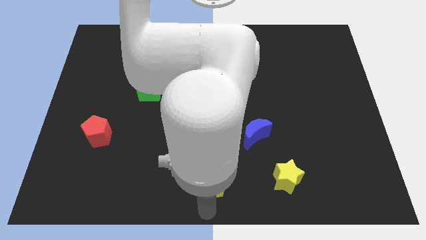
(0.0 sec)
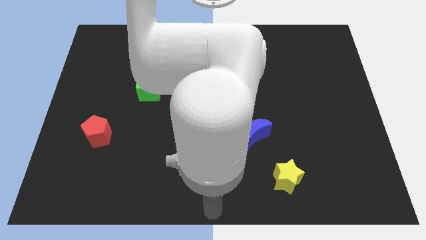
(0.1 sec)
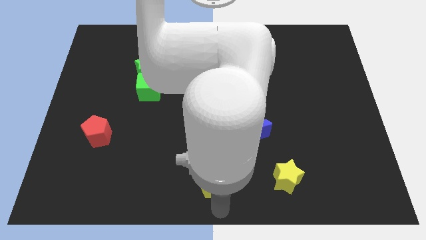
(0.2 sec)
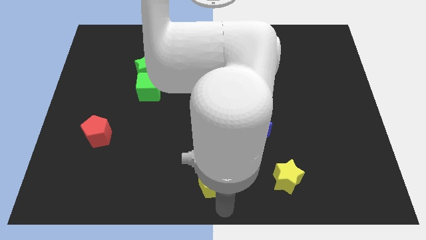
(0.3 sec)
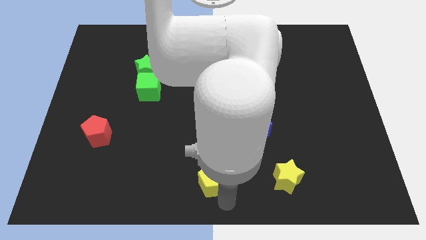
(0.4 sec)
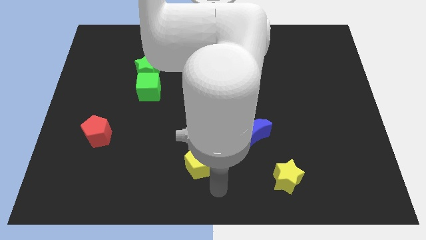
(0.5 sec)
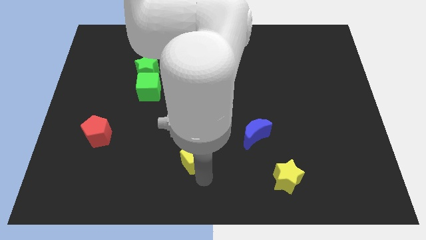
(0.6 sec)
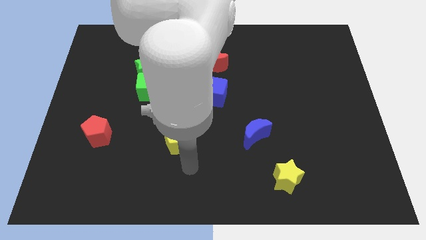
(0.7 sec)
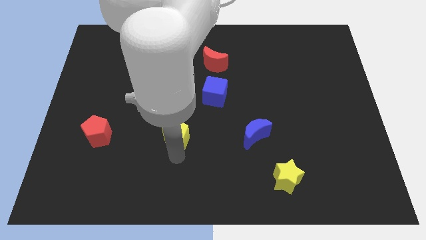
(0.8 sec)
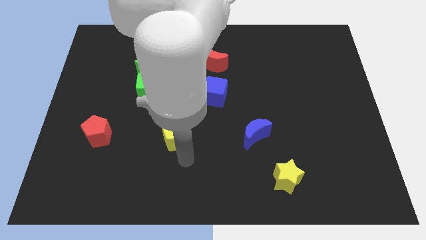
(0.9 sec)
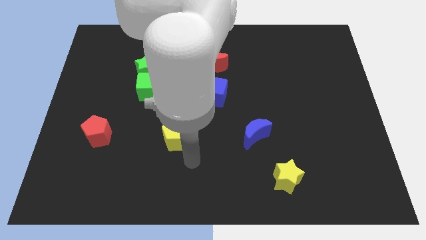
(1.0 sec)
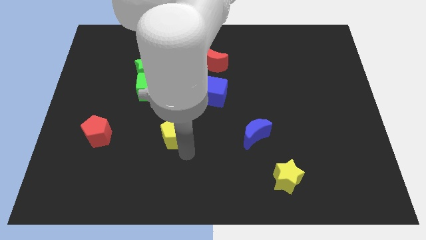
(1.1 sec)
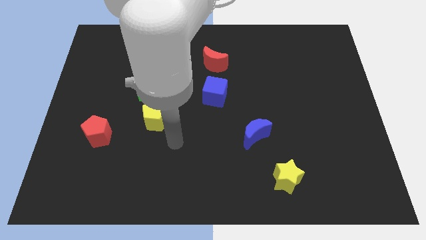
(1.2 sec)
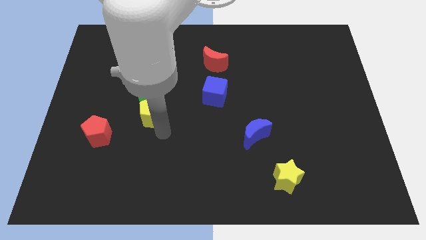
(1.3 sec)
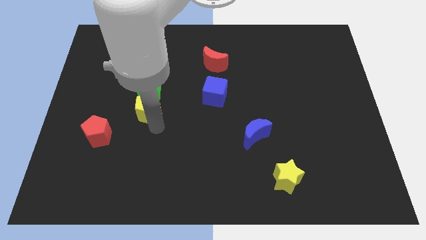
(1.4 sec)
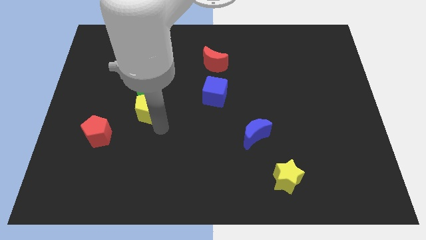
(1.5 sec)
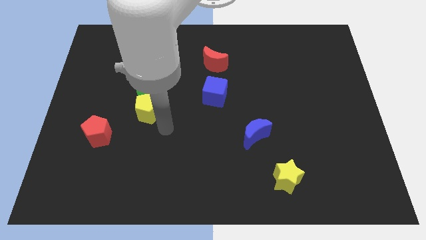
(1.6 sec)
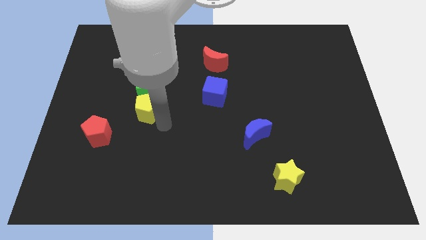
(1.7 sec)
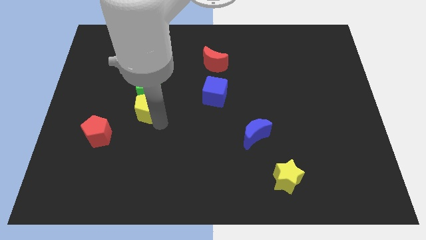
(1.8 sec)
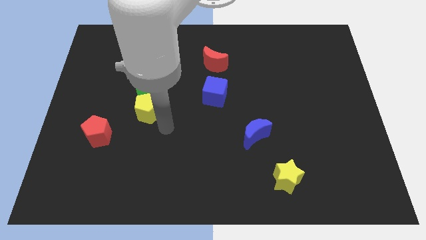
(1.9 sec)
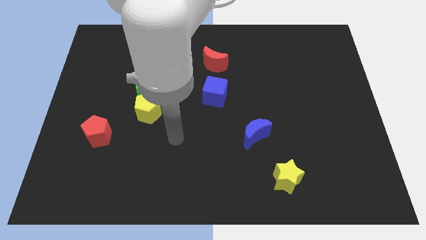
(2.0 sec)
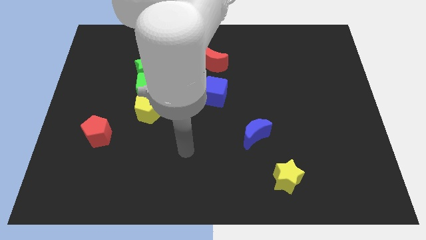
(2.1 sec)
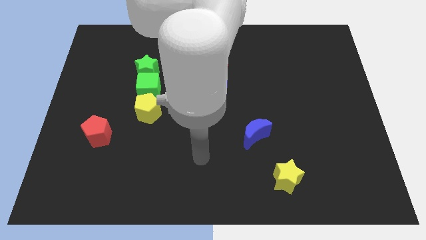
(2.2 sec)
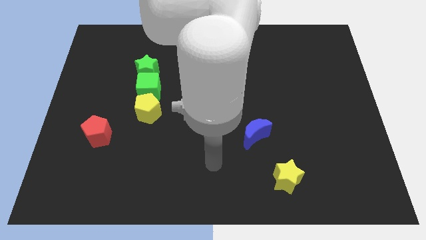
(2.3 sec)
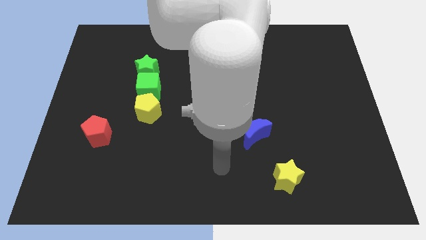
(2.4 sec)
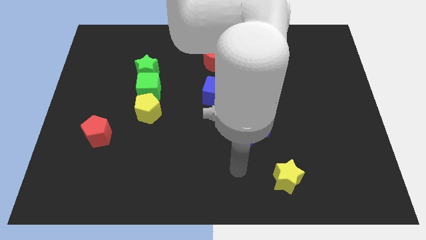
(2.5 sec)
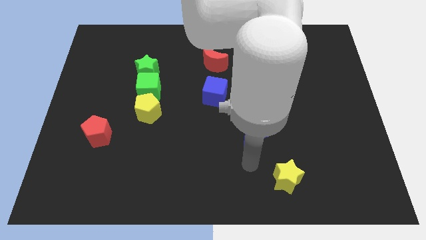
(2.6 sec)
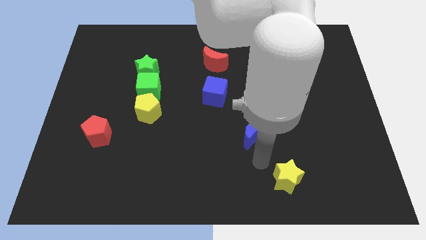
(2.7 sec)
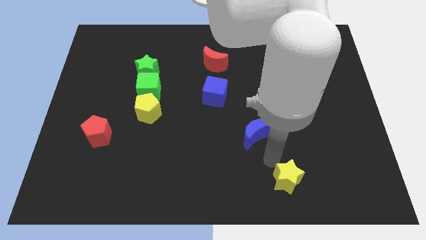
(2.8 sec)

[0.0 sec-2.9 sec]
push the yellow pentagon to the bottom of the green cube

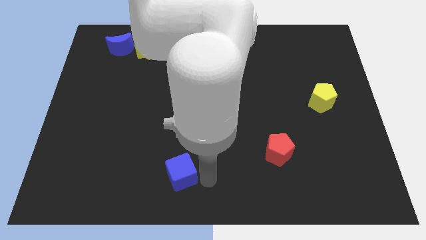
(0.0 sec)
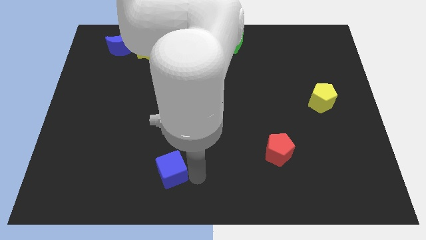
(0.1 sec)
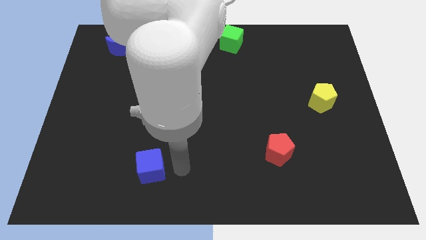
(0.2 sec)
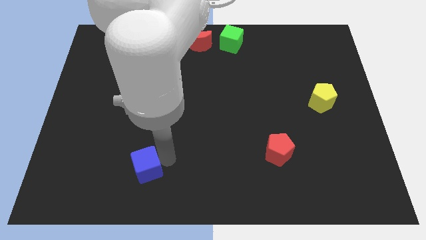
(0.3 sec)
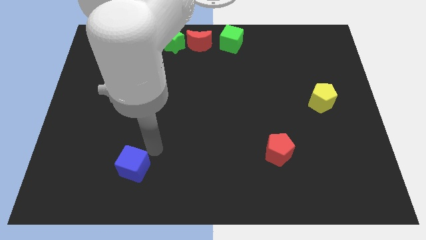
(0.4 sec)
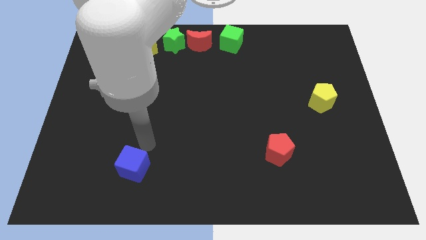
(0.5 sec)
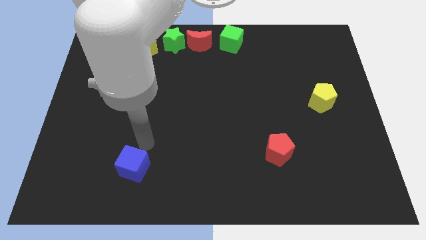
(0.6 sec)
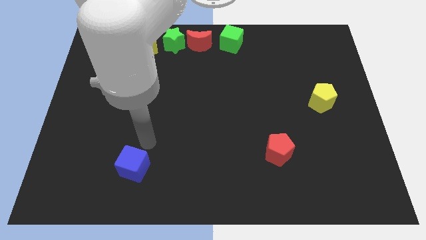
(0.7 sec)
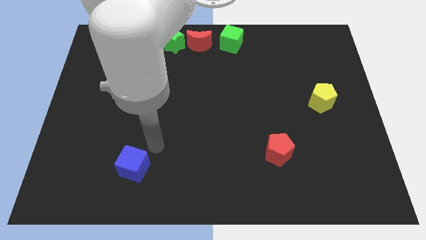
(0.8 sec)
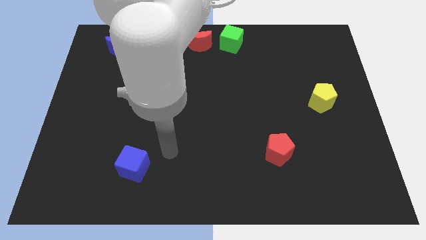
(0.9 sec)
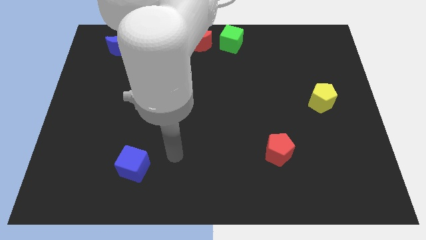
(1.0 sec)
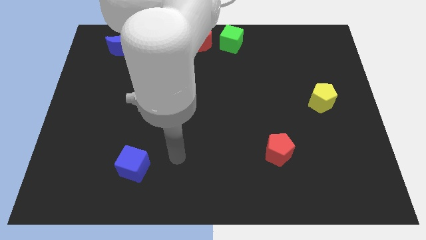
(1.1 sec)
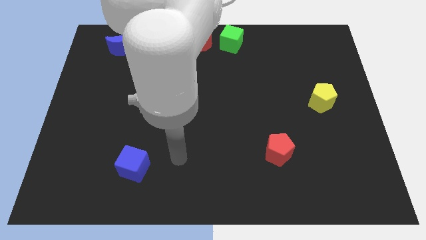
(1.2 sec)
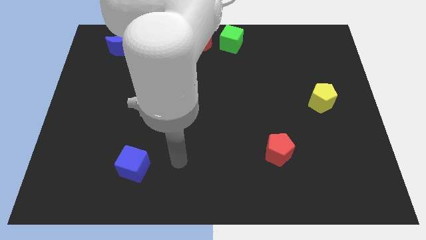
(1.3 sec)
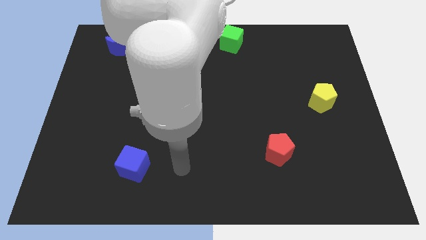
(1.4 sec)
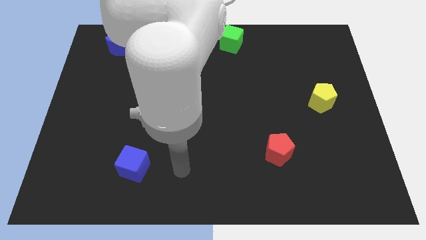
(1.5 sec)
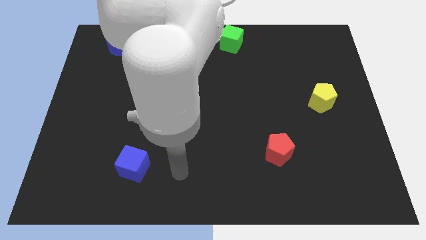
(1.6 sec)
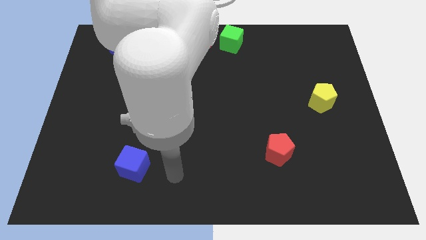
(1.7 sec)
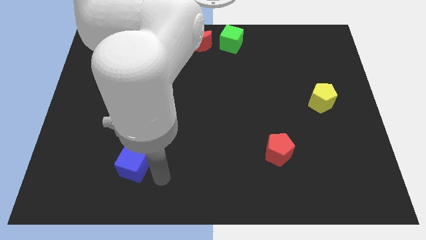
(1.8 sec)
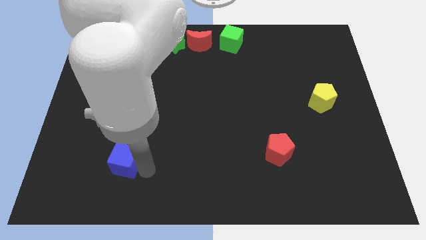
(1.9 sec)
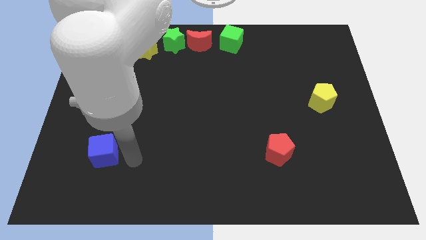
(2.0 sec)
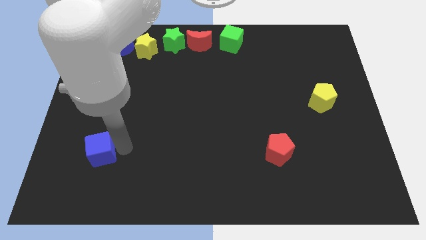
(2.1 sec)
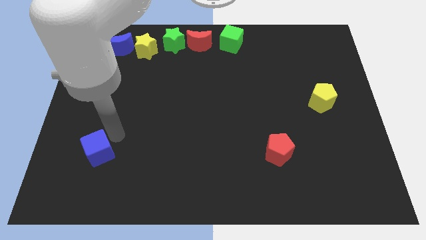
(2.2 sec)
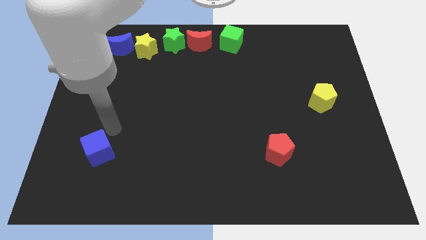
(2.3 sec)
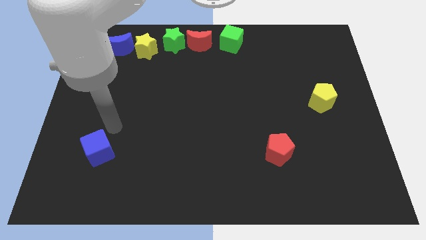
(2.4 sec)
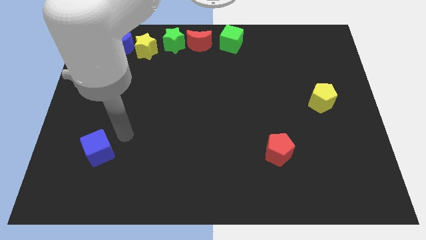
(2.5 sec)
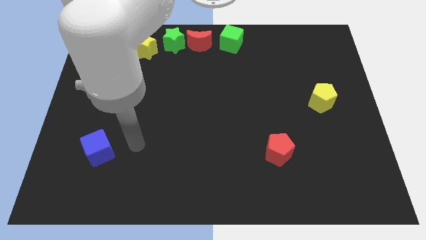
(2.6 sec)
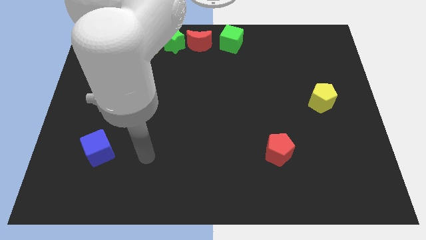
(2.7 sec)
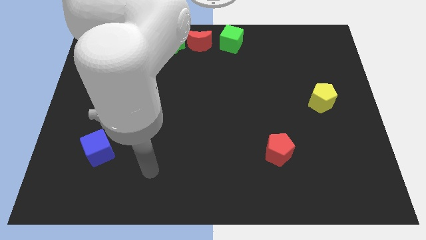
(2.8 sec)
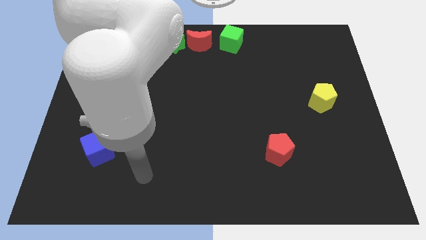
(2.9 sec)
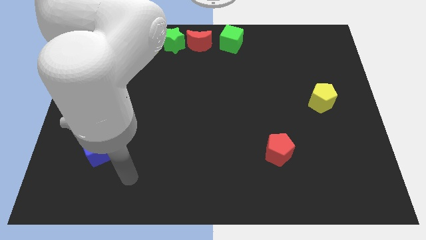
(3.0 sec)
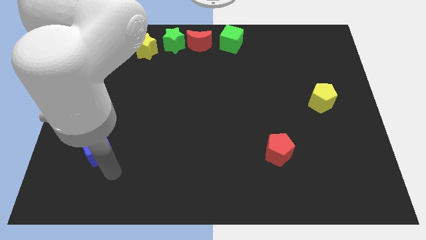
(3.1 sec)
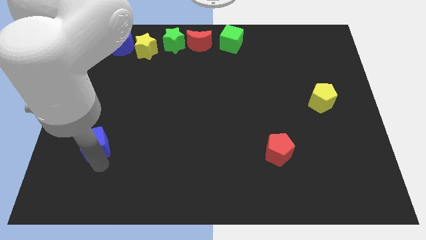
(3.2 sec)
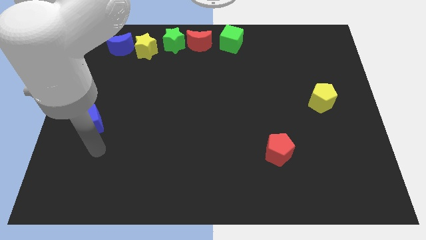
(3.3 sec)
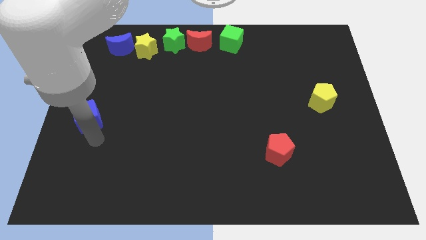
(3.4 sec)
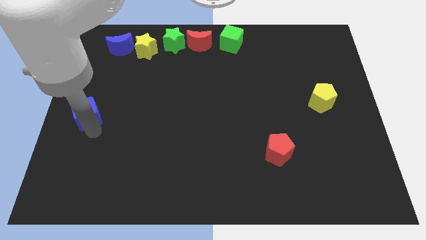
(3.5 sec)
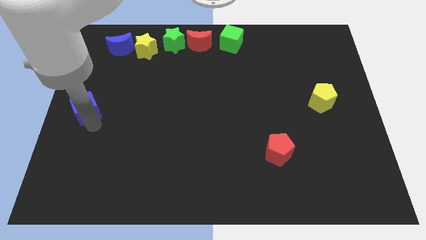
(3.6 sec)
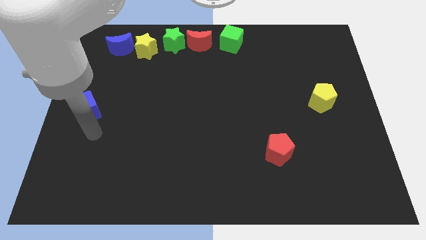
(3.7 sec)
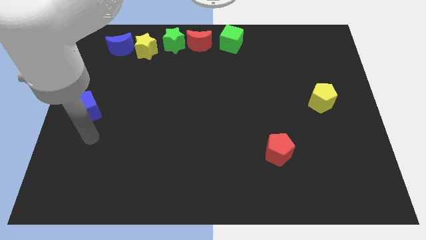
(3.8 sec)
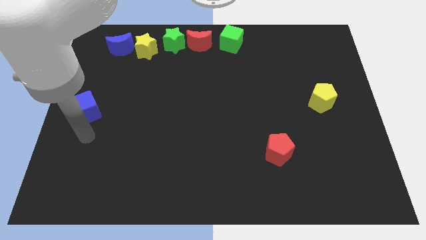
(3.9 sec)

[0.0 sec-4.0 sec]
move the blue cube to the middle left

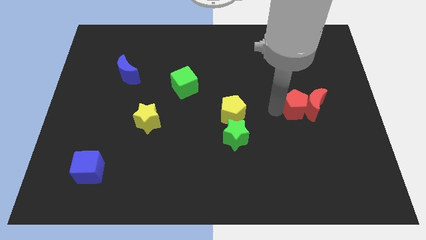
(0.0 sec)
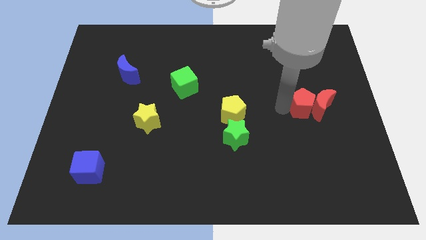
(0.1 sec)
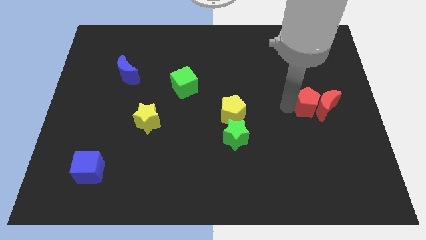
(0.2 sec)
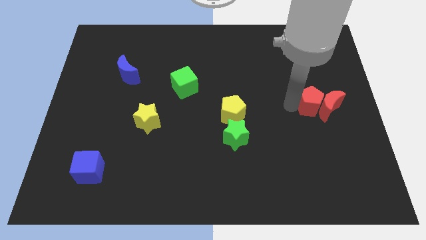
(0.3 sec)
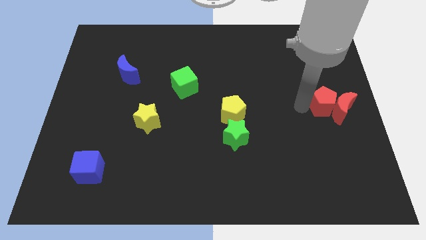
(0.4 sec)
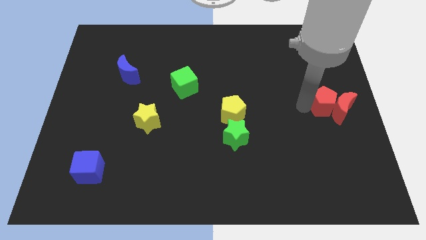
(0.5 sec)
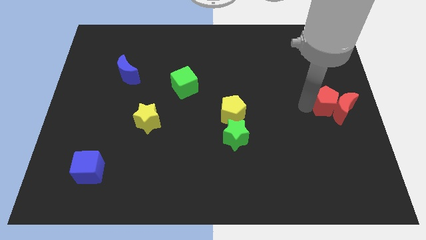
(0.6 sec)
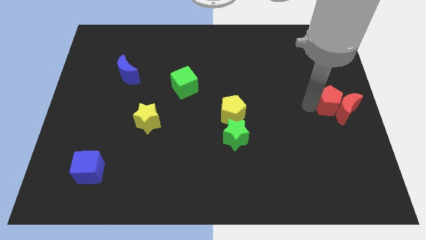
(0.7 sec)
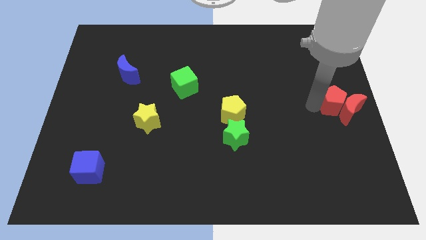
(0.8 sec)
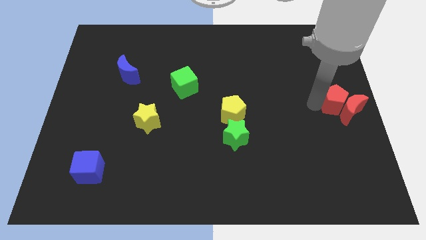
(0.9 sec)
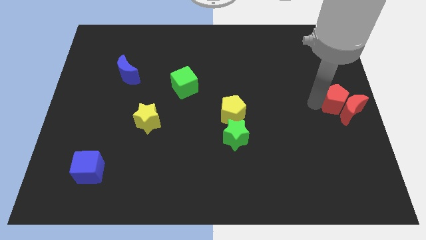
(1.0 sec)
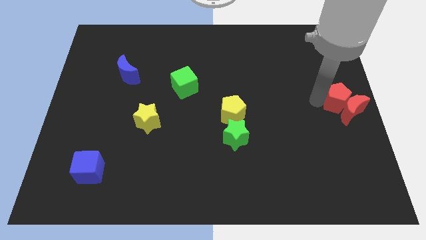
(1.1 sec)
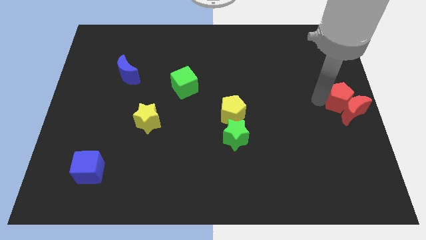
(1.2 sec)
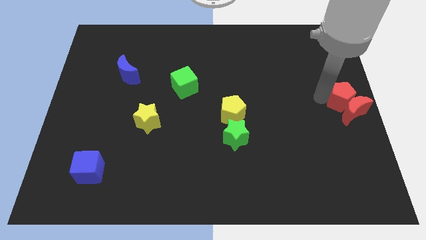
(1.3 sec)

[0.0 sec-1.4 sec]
place the red blocks at the center right of the board

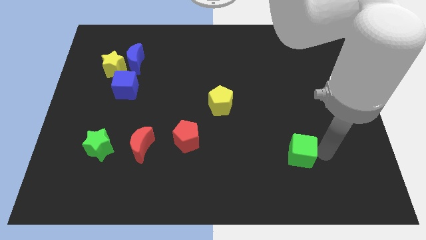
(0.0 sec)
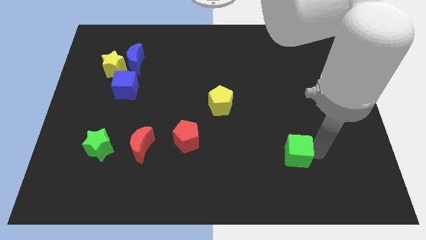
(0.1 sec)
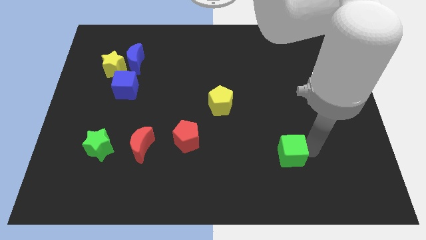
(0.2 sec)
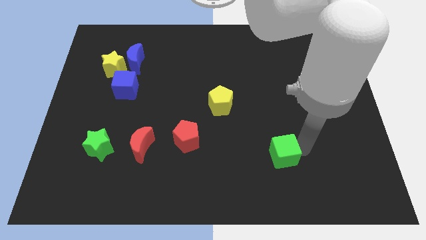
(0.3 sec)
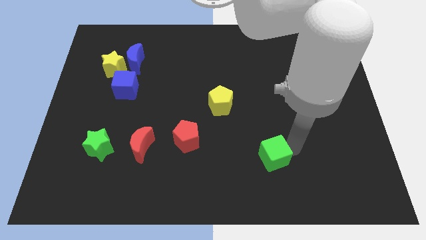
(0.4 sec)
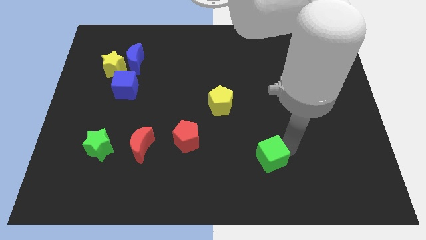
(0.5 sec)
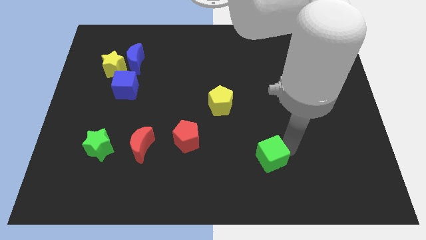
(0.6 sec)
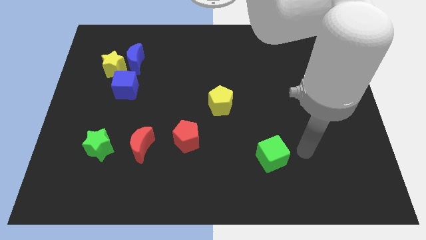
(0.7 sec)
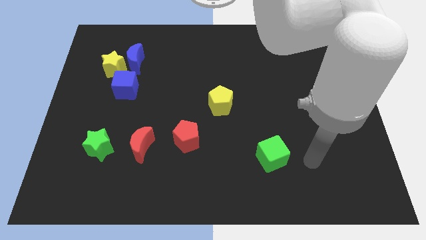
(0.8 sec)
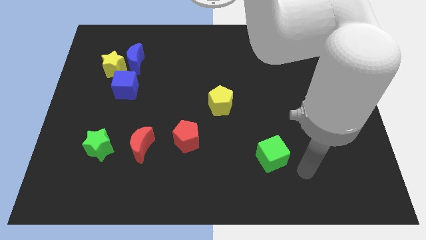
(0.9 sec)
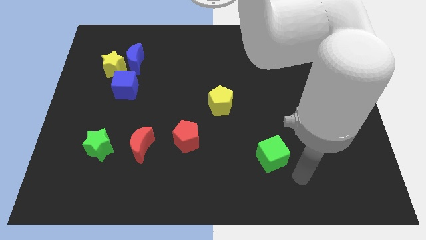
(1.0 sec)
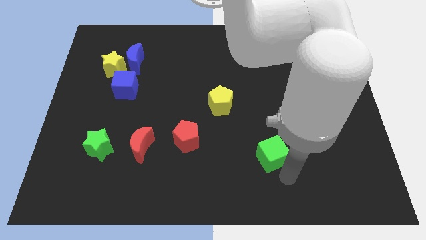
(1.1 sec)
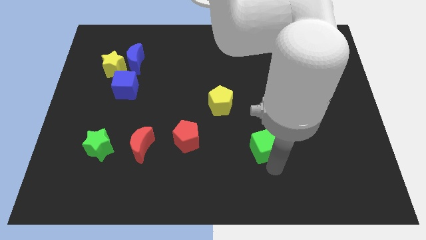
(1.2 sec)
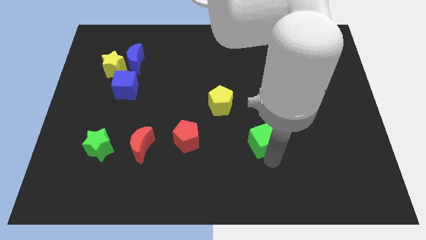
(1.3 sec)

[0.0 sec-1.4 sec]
push the green cube diagonally on the bottom right side of the yellow pentagon
